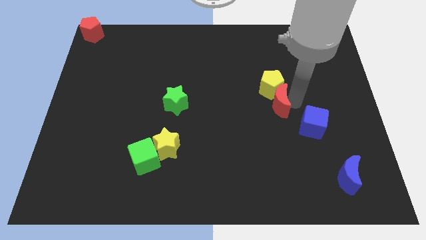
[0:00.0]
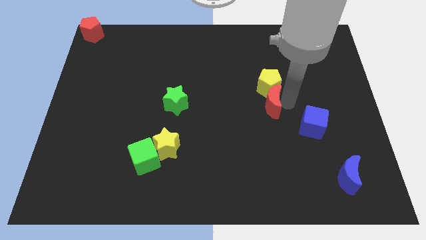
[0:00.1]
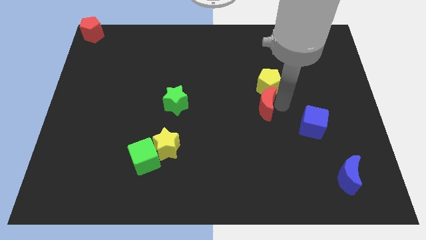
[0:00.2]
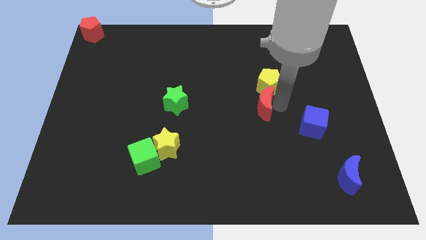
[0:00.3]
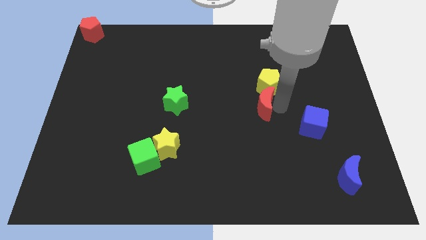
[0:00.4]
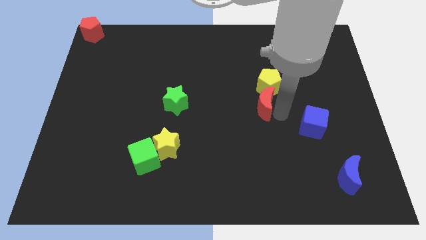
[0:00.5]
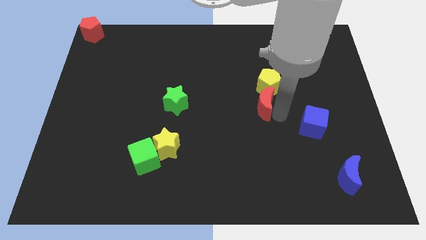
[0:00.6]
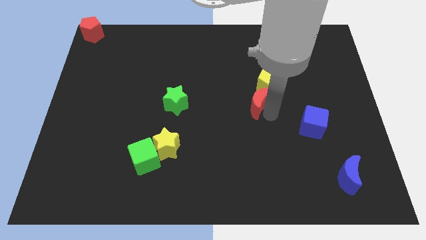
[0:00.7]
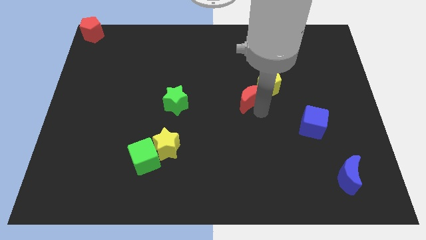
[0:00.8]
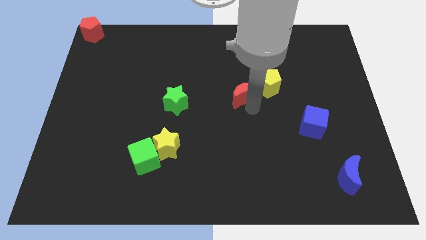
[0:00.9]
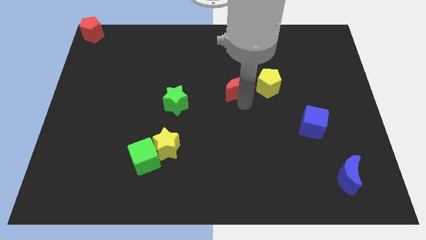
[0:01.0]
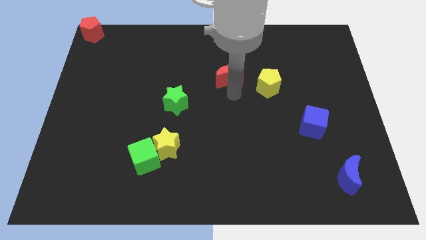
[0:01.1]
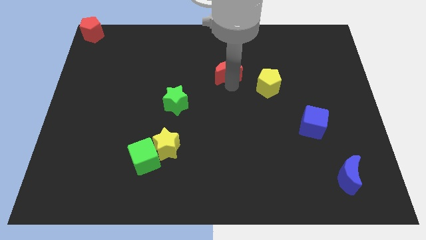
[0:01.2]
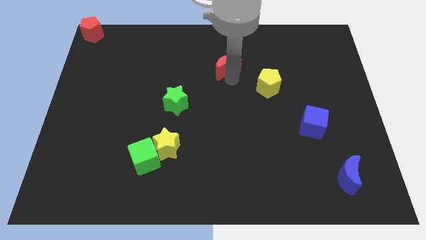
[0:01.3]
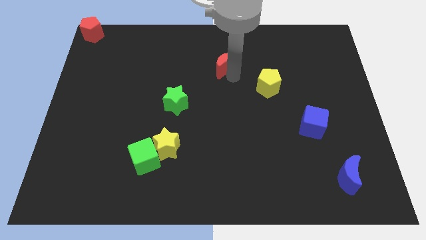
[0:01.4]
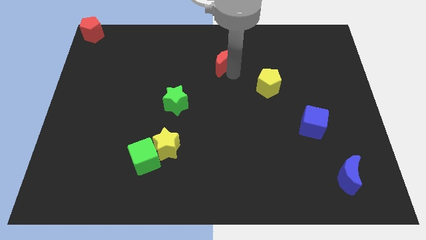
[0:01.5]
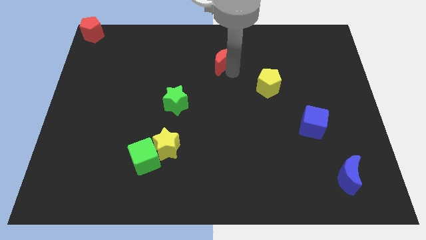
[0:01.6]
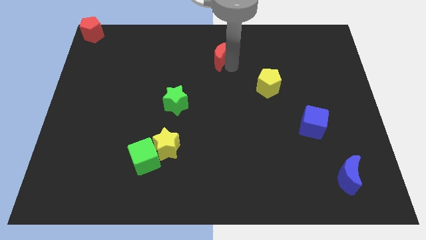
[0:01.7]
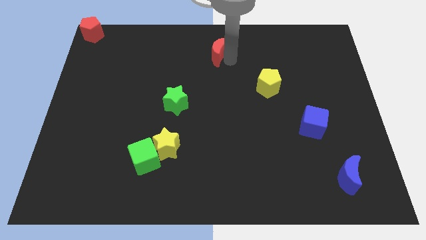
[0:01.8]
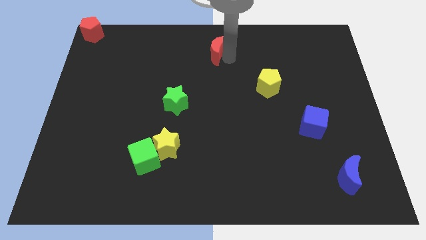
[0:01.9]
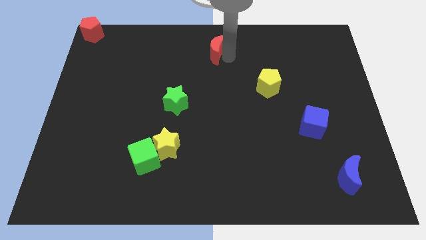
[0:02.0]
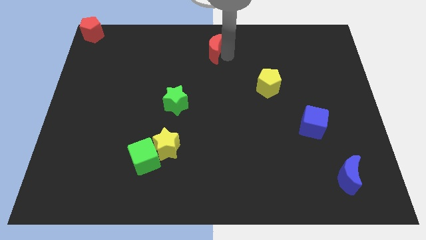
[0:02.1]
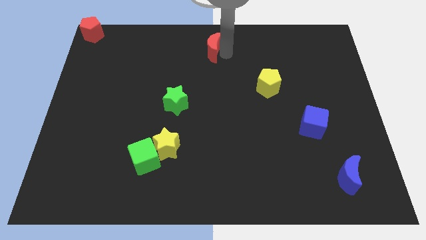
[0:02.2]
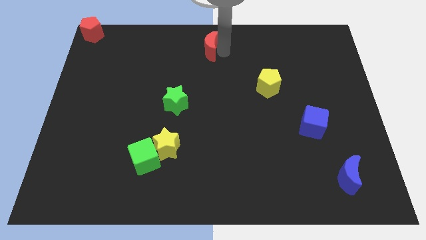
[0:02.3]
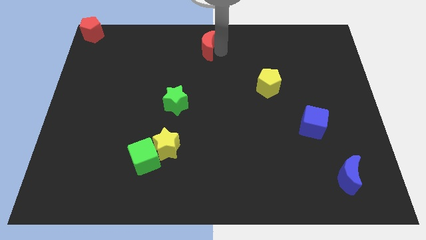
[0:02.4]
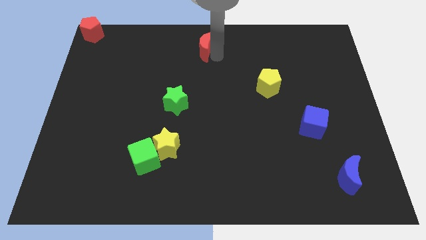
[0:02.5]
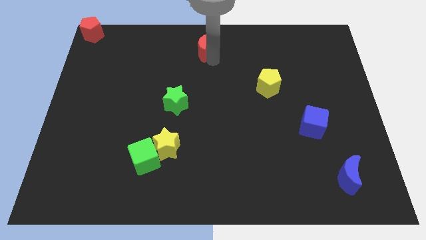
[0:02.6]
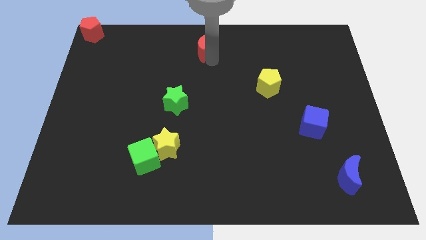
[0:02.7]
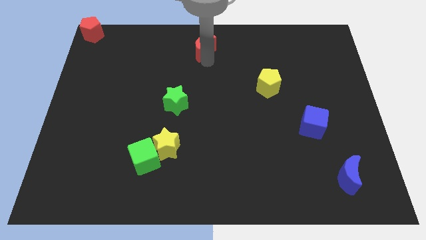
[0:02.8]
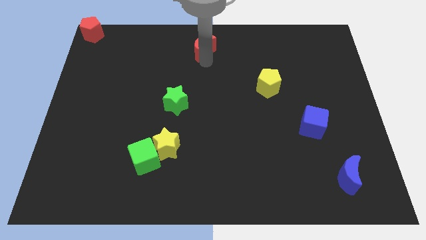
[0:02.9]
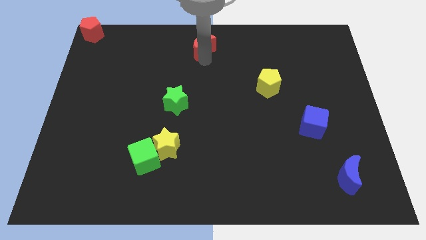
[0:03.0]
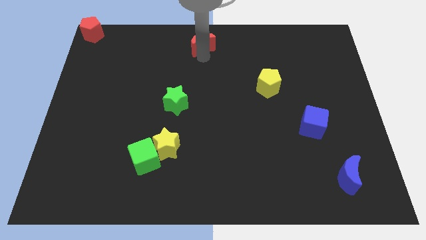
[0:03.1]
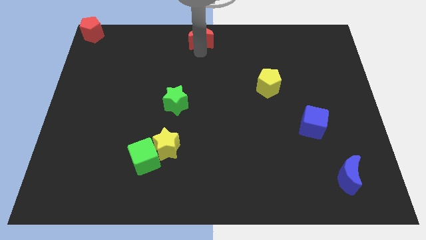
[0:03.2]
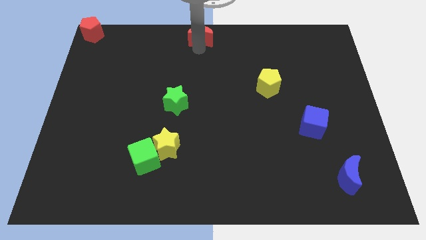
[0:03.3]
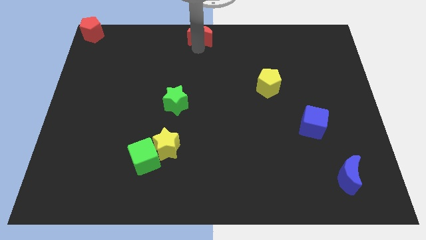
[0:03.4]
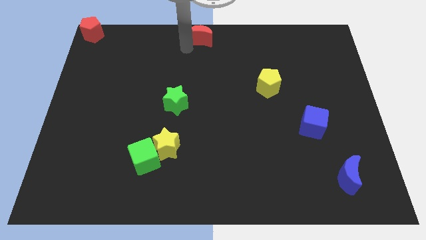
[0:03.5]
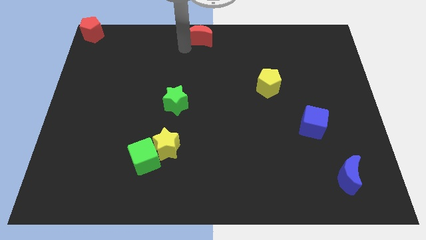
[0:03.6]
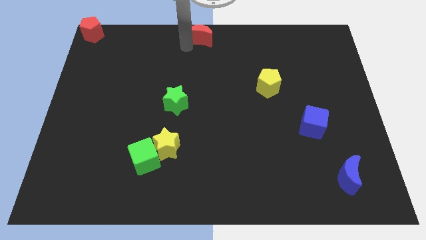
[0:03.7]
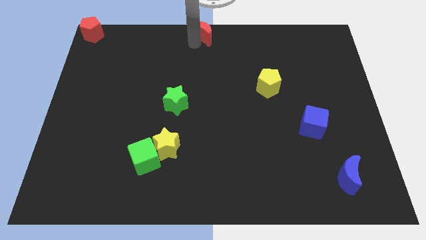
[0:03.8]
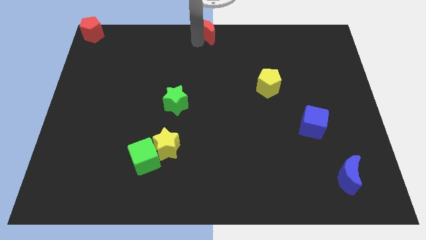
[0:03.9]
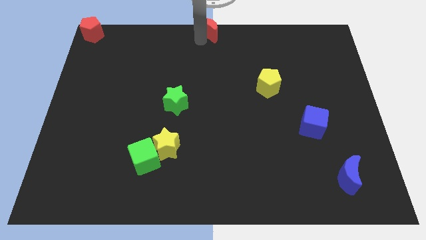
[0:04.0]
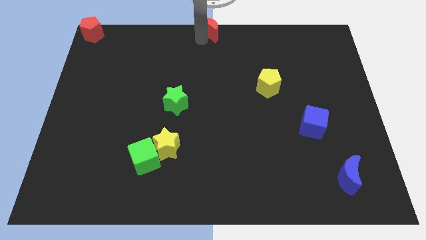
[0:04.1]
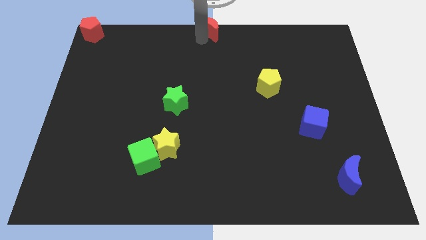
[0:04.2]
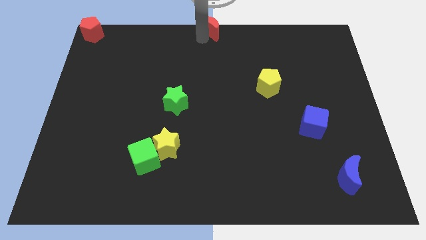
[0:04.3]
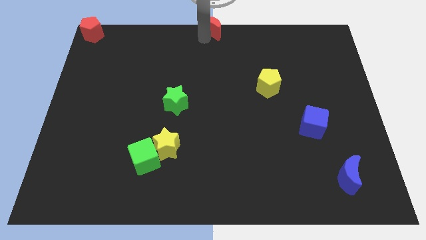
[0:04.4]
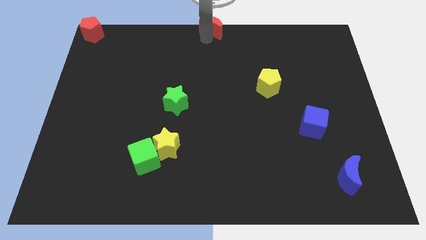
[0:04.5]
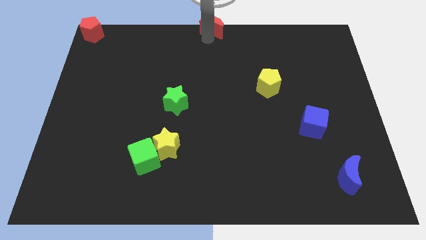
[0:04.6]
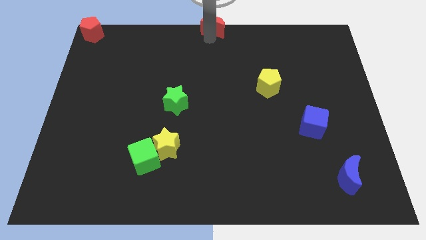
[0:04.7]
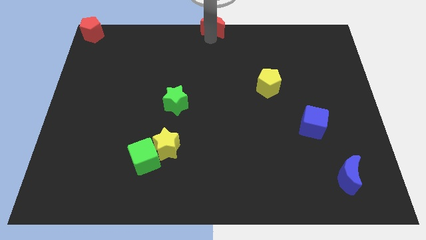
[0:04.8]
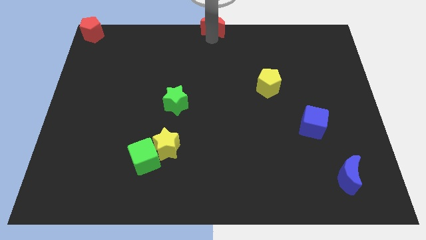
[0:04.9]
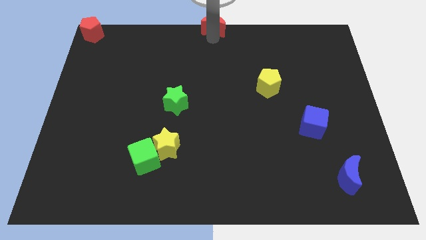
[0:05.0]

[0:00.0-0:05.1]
place red moon at the top center

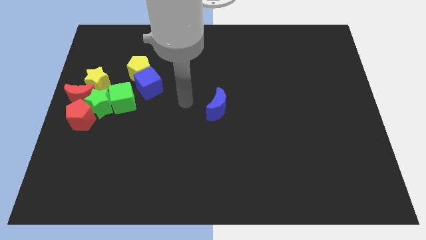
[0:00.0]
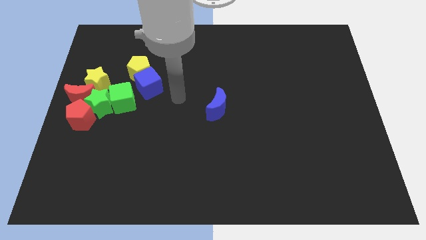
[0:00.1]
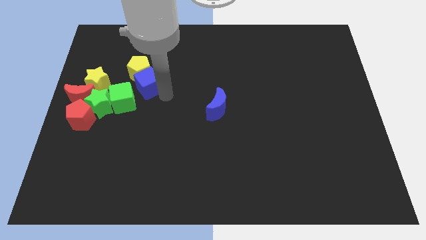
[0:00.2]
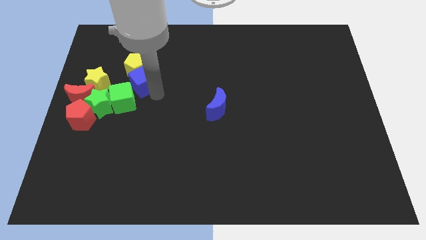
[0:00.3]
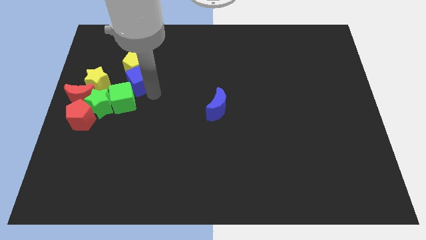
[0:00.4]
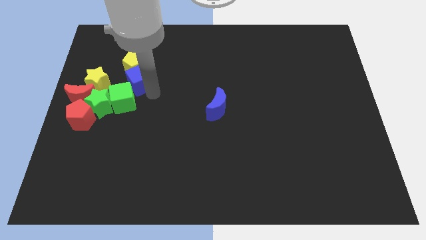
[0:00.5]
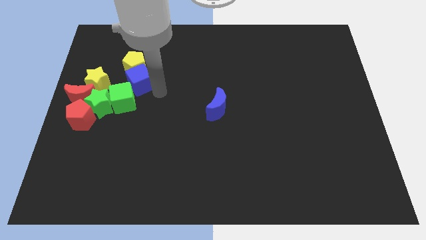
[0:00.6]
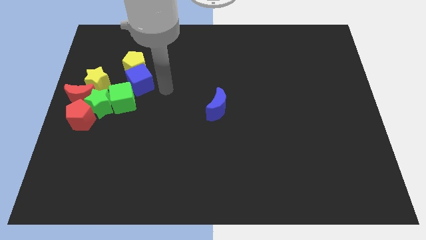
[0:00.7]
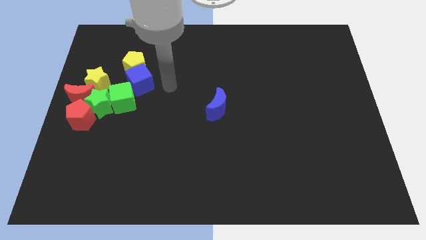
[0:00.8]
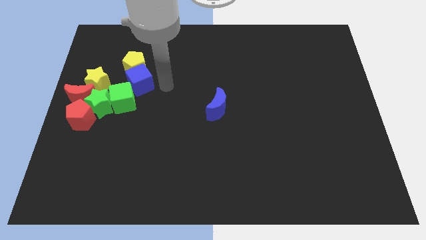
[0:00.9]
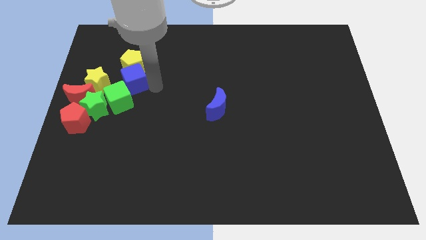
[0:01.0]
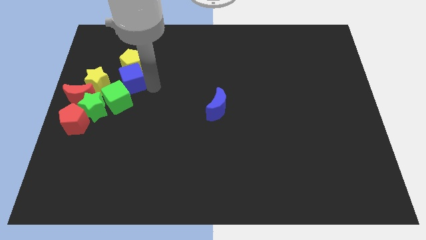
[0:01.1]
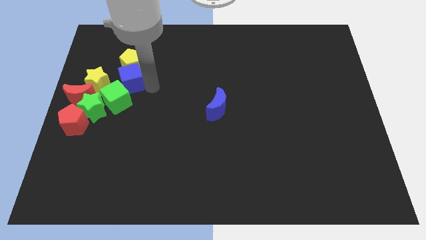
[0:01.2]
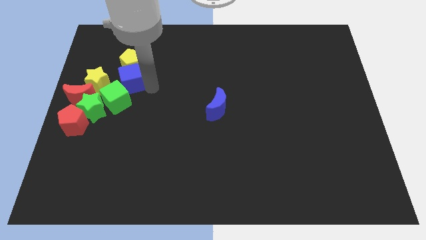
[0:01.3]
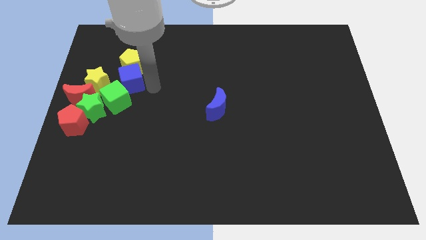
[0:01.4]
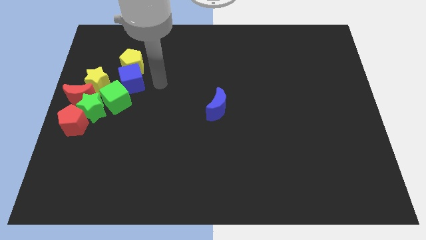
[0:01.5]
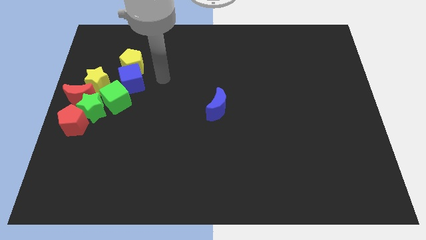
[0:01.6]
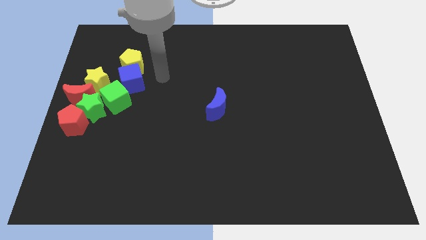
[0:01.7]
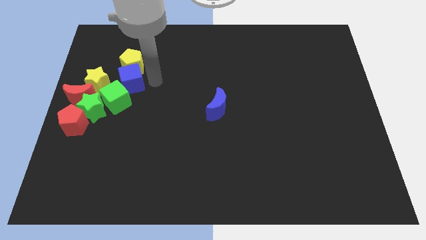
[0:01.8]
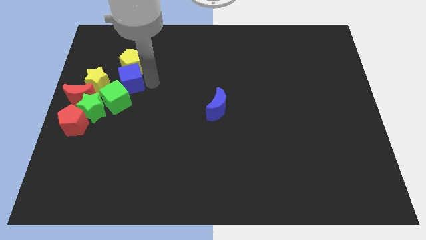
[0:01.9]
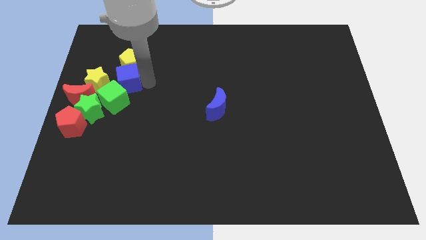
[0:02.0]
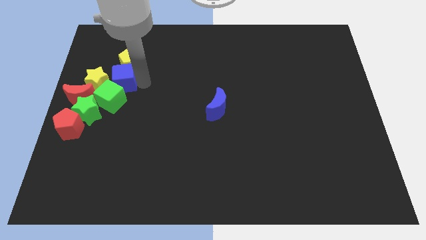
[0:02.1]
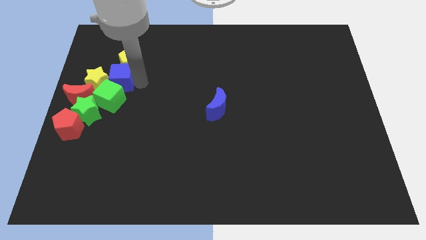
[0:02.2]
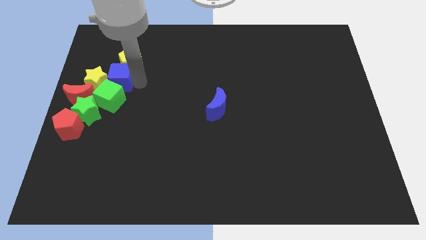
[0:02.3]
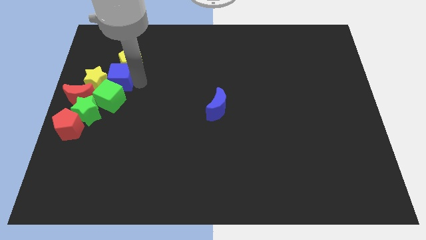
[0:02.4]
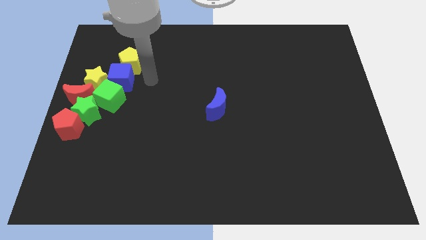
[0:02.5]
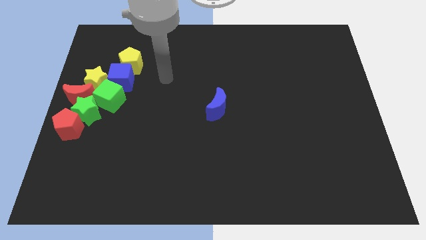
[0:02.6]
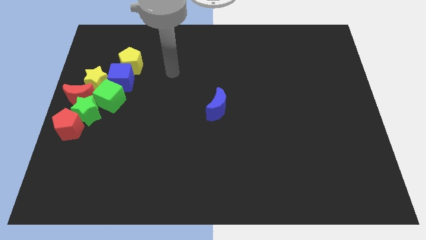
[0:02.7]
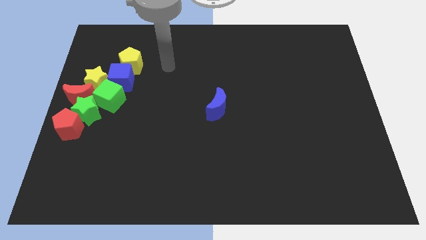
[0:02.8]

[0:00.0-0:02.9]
place the blue cube in between the yellow pentagon and the green cube

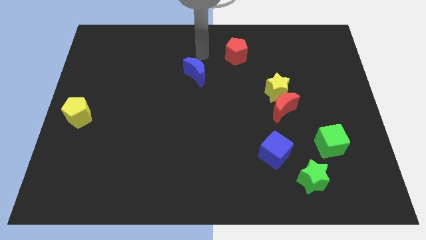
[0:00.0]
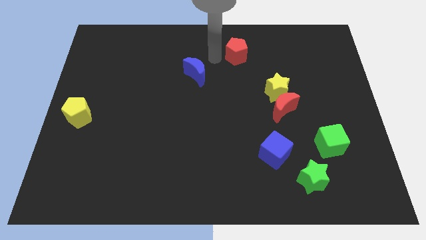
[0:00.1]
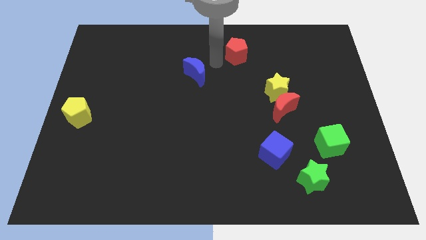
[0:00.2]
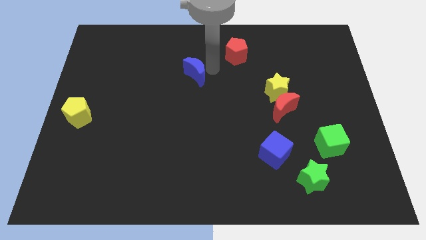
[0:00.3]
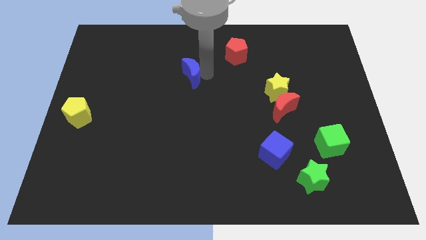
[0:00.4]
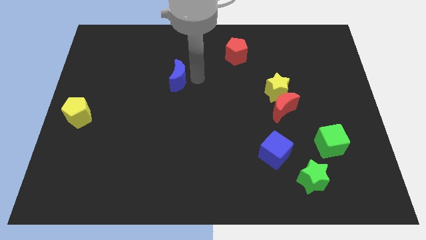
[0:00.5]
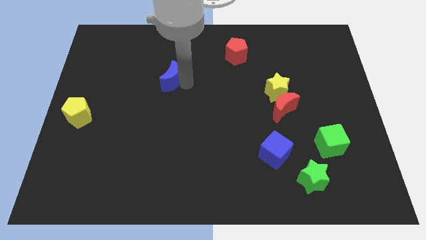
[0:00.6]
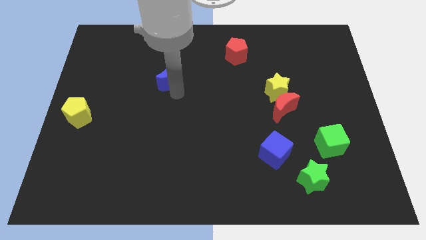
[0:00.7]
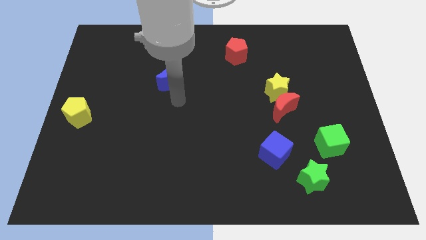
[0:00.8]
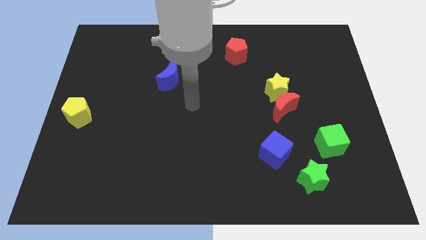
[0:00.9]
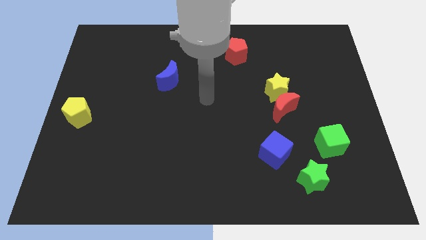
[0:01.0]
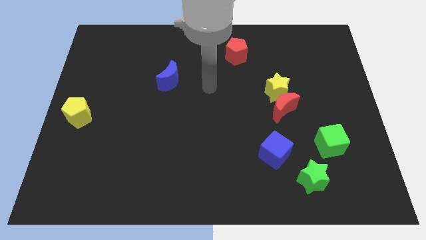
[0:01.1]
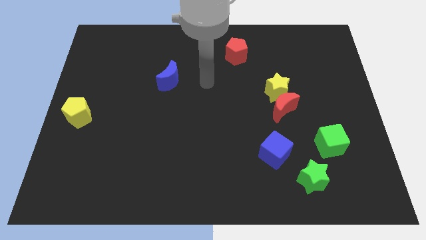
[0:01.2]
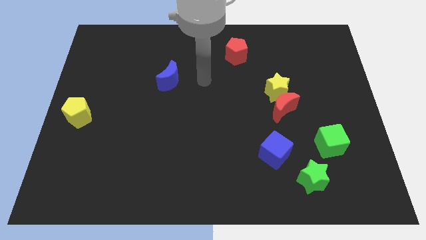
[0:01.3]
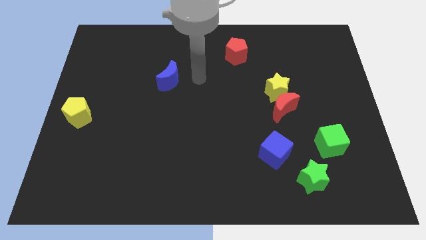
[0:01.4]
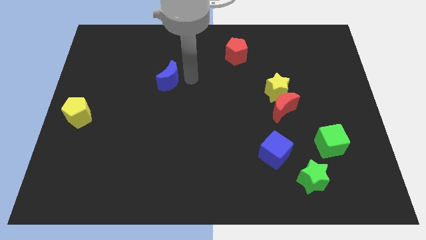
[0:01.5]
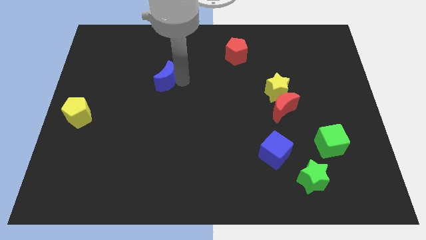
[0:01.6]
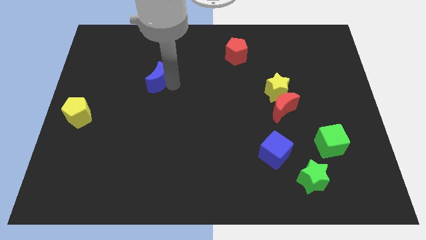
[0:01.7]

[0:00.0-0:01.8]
push the blue crescent towards the left side of the board
